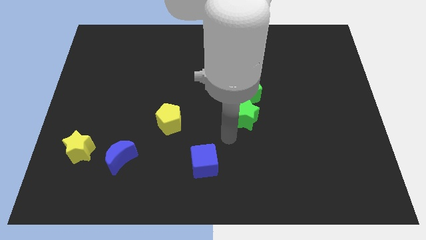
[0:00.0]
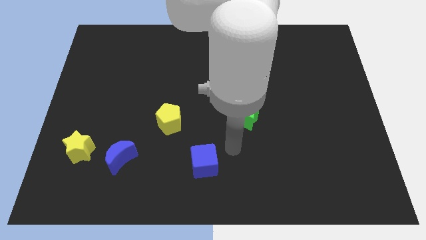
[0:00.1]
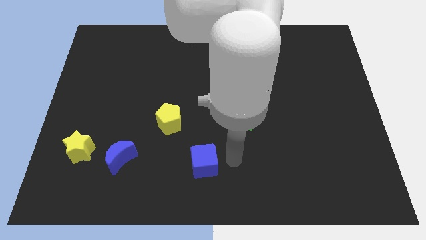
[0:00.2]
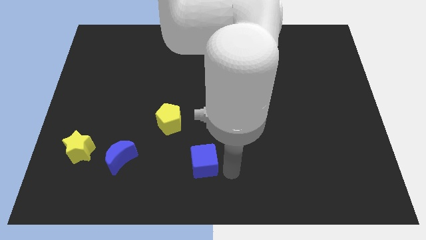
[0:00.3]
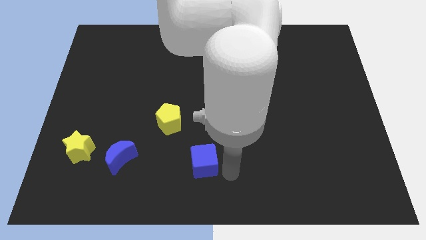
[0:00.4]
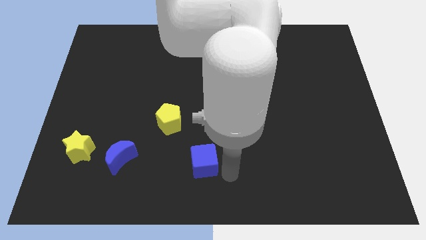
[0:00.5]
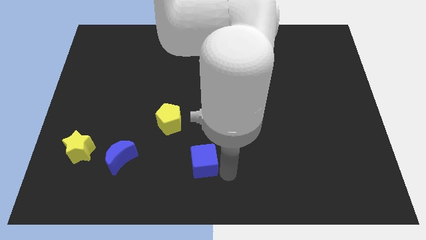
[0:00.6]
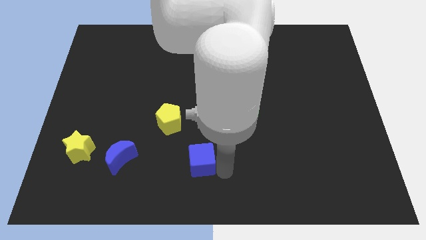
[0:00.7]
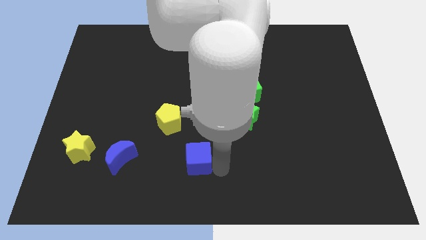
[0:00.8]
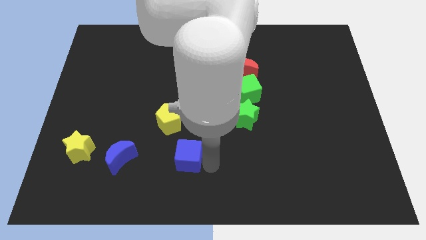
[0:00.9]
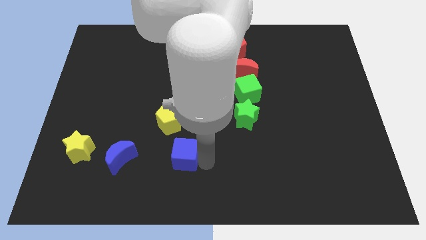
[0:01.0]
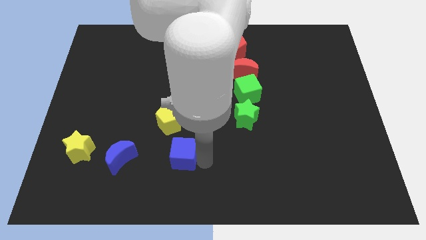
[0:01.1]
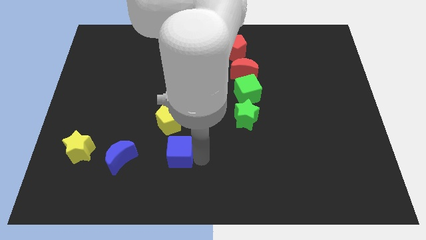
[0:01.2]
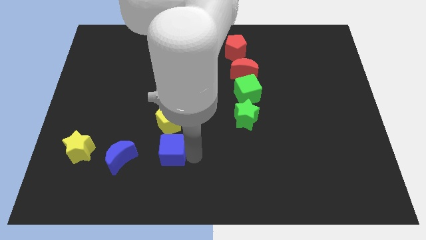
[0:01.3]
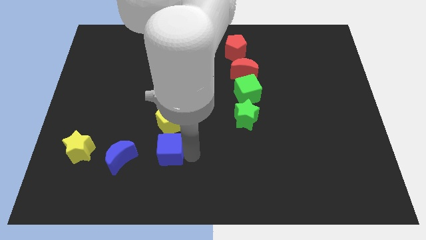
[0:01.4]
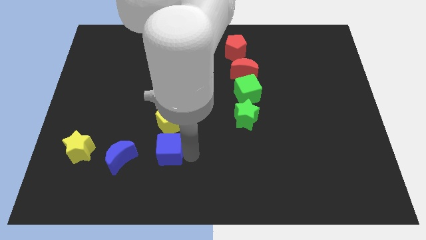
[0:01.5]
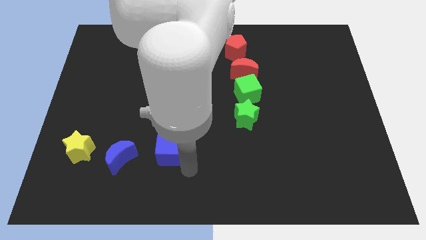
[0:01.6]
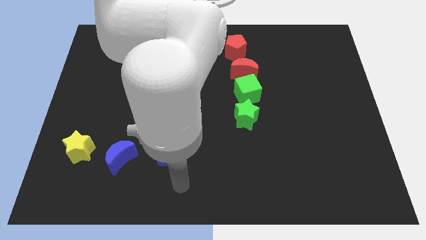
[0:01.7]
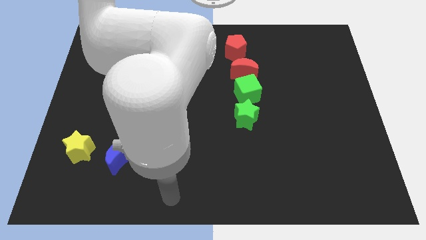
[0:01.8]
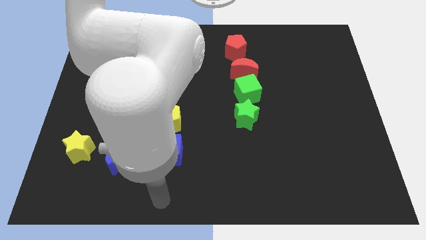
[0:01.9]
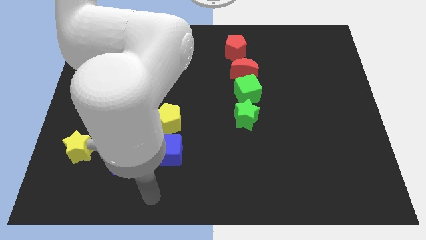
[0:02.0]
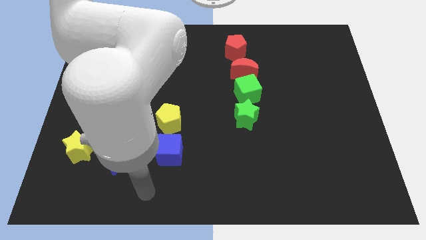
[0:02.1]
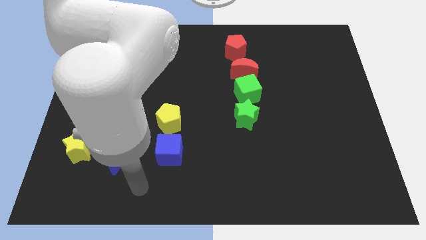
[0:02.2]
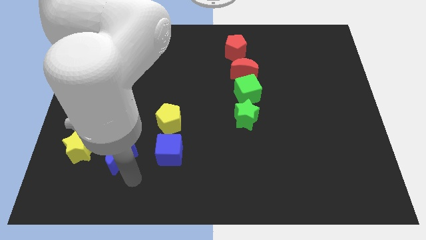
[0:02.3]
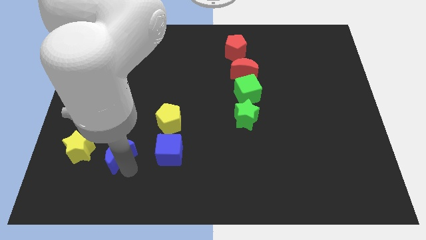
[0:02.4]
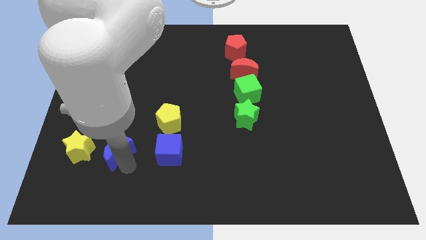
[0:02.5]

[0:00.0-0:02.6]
put the blue cube below the yellow pentagon

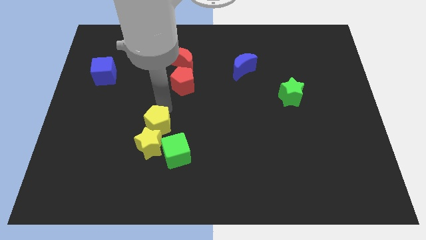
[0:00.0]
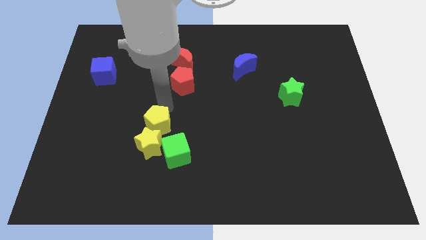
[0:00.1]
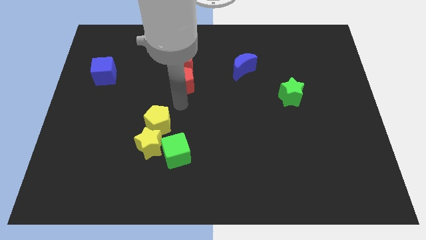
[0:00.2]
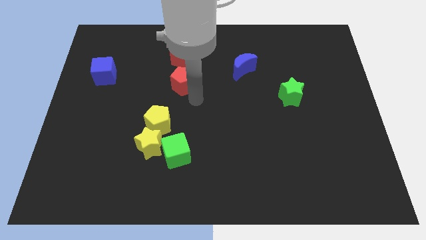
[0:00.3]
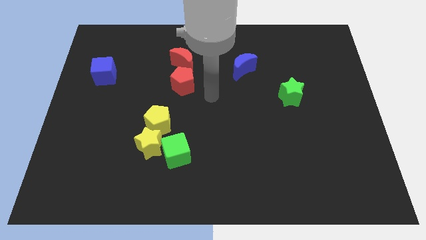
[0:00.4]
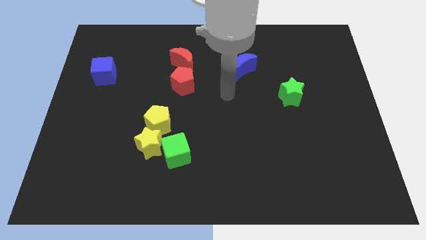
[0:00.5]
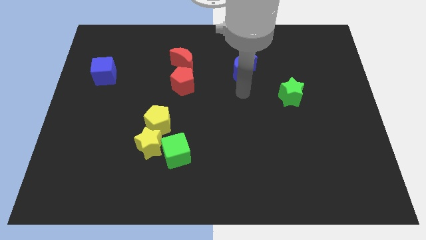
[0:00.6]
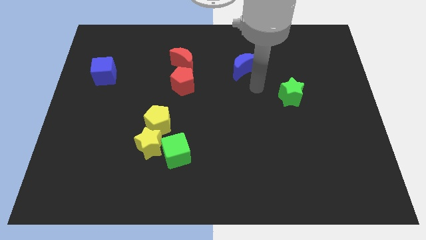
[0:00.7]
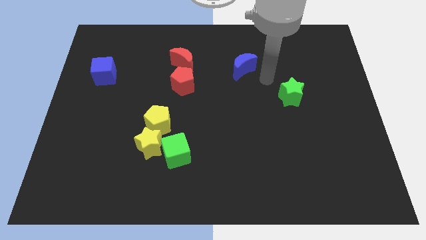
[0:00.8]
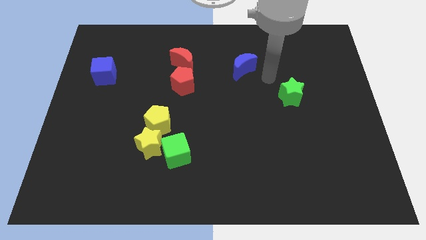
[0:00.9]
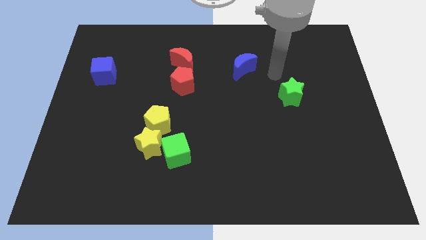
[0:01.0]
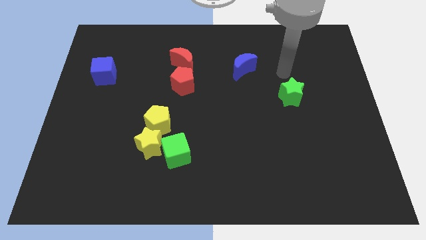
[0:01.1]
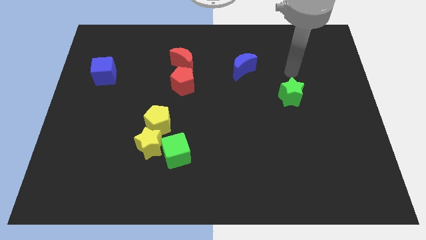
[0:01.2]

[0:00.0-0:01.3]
go and point your hand at the top of the green star

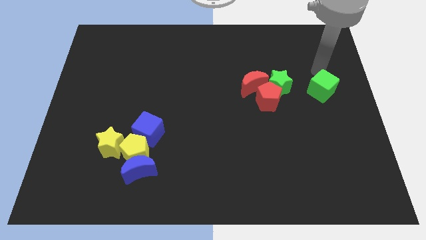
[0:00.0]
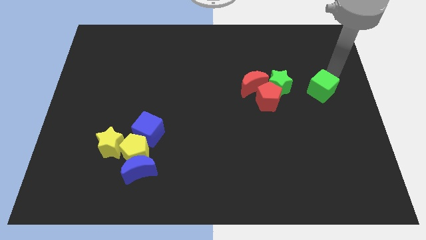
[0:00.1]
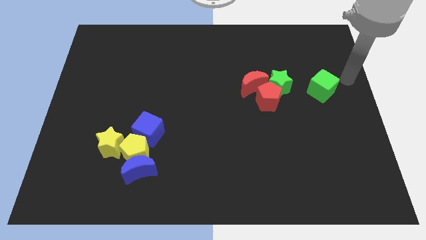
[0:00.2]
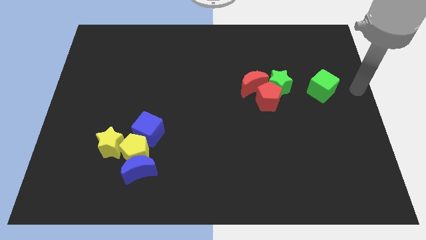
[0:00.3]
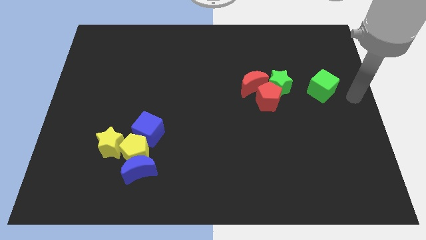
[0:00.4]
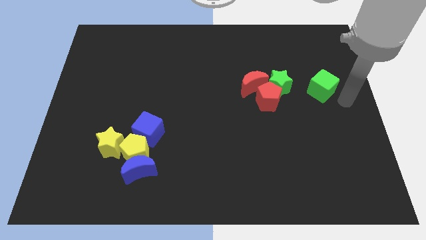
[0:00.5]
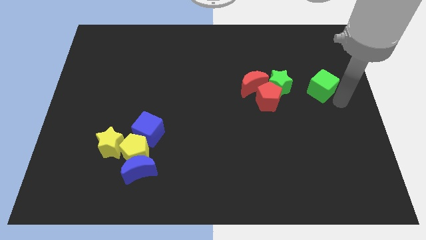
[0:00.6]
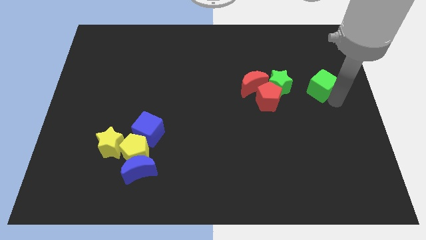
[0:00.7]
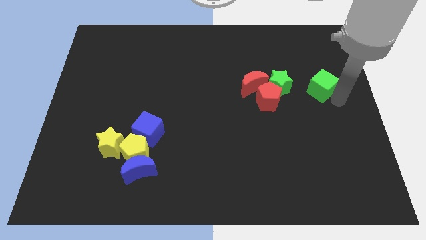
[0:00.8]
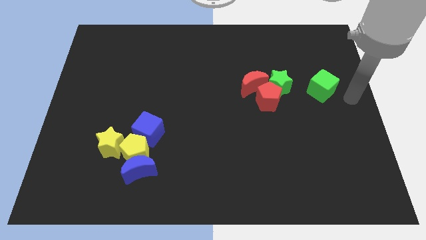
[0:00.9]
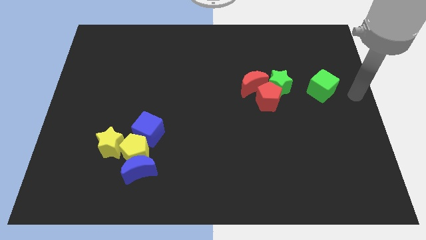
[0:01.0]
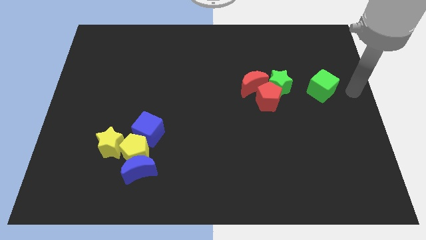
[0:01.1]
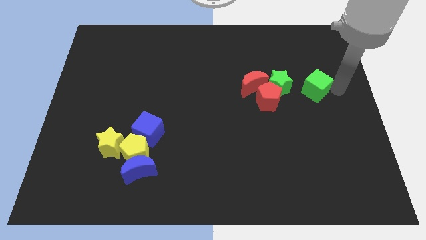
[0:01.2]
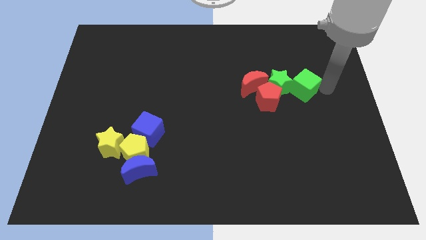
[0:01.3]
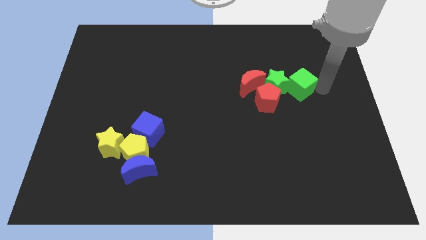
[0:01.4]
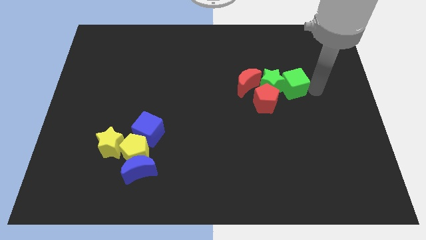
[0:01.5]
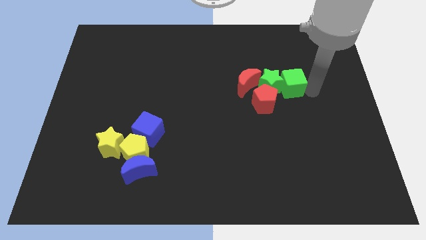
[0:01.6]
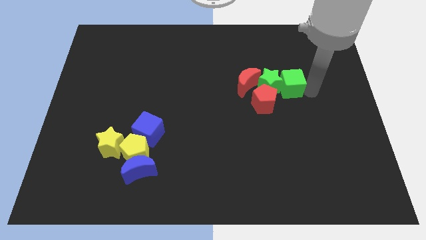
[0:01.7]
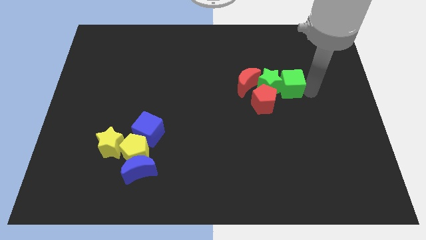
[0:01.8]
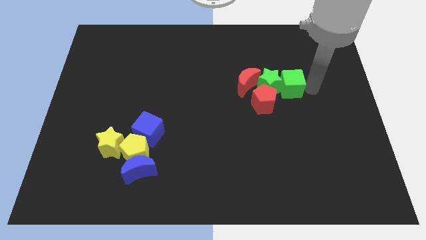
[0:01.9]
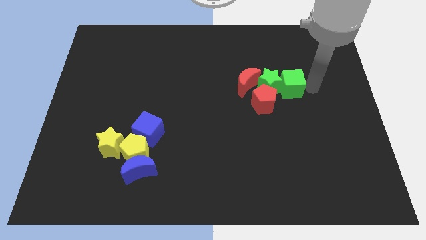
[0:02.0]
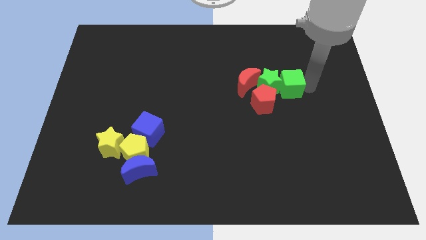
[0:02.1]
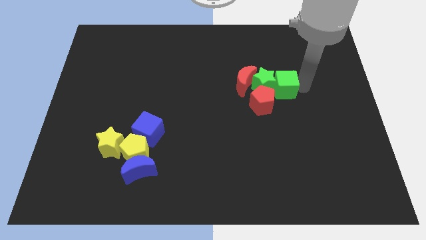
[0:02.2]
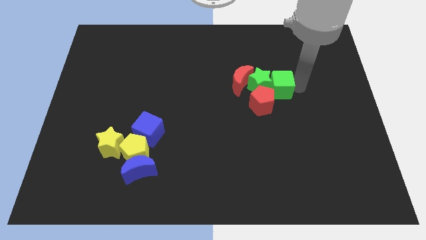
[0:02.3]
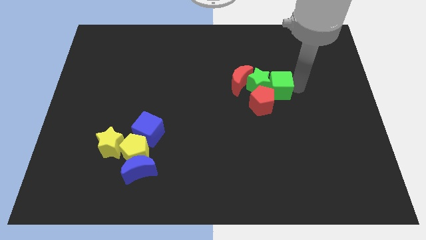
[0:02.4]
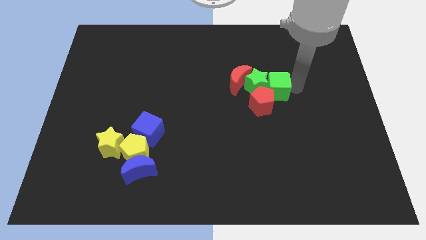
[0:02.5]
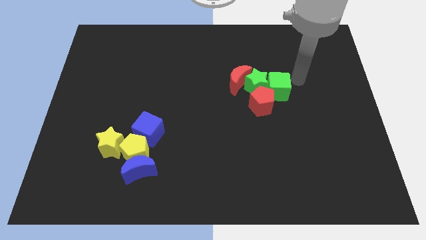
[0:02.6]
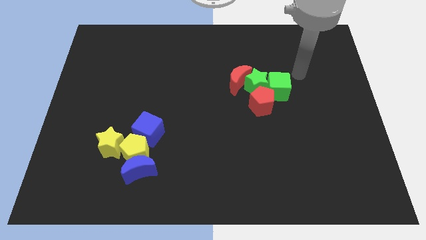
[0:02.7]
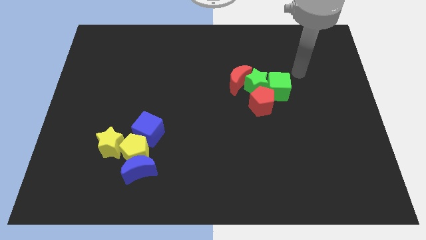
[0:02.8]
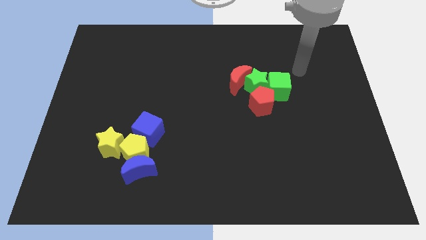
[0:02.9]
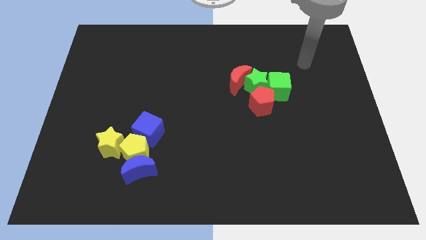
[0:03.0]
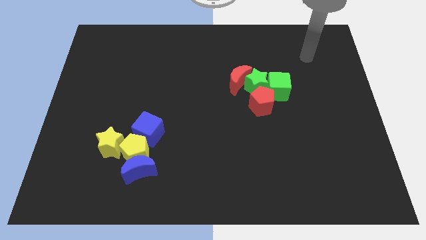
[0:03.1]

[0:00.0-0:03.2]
slide the green cube into the green star

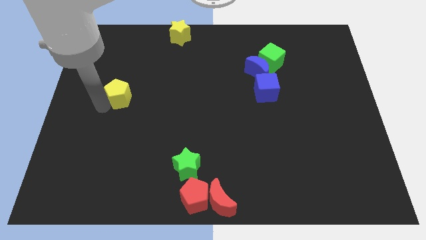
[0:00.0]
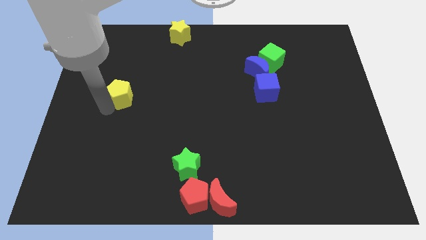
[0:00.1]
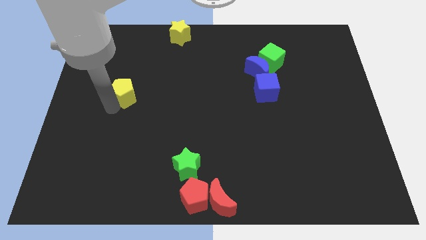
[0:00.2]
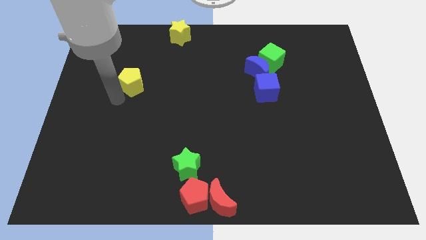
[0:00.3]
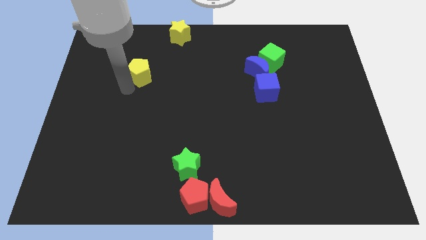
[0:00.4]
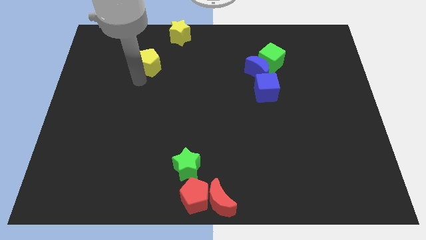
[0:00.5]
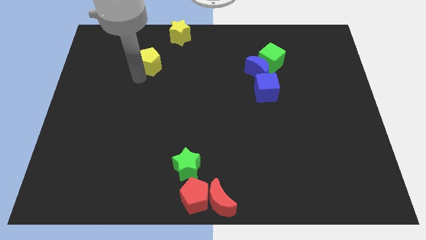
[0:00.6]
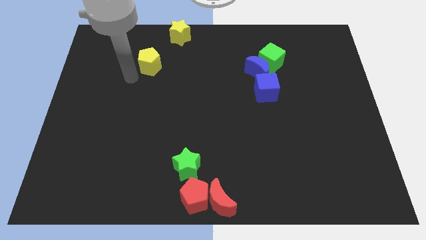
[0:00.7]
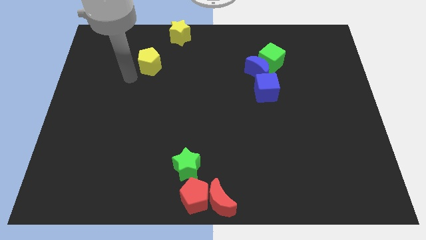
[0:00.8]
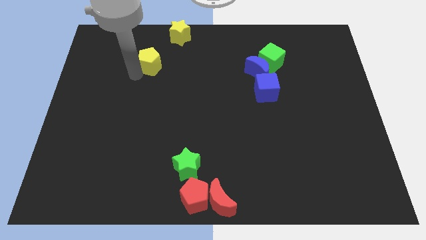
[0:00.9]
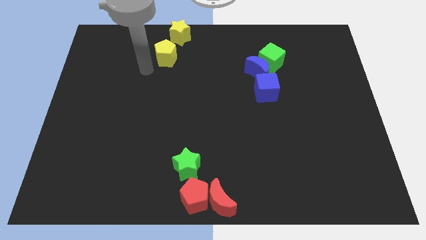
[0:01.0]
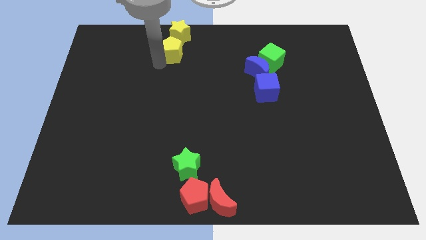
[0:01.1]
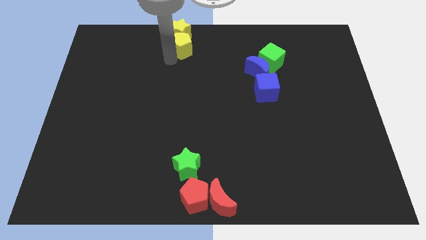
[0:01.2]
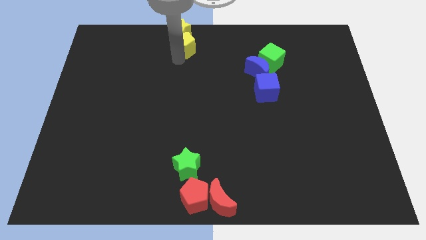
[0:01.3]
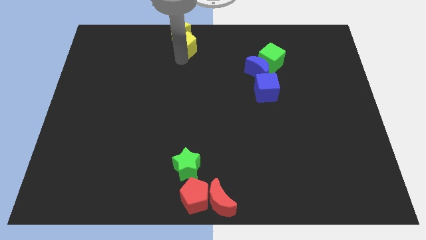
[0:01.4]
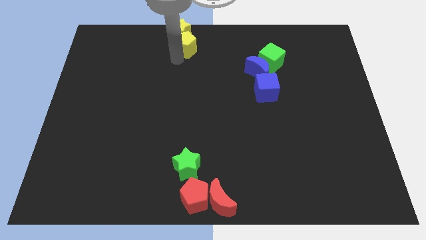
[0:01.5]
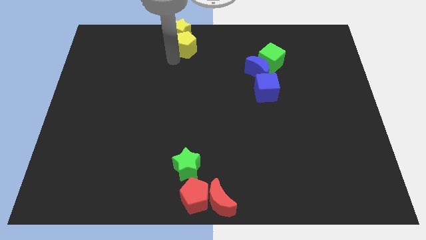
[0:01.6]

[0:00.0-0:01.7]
push the yellow pentagon into the yellow star

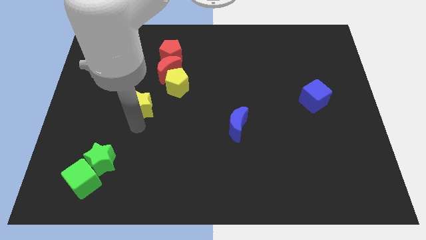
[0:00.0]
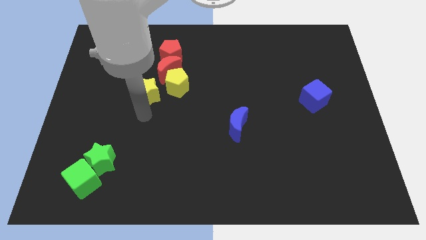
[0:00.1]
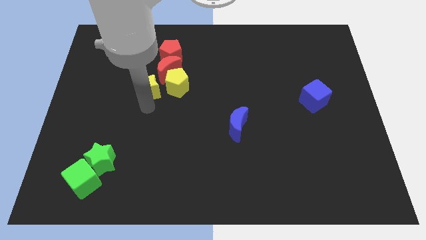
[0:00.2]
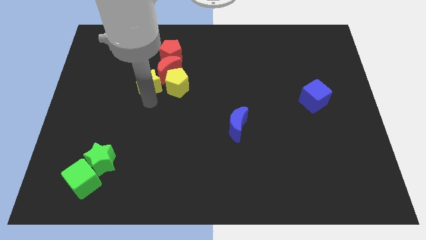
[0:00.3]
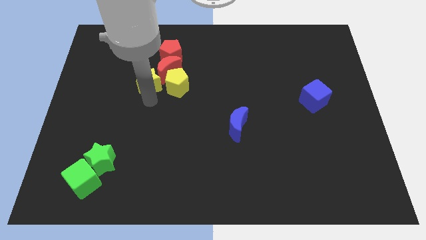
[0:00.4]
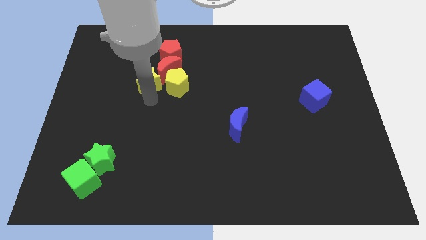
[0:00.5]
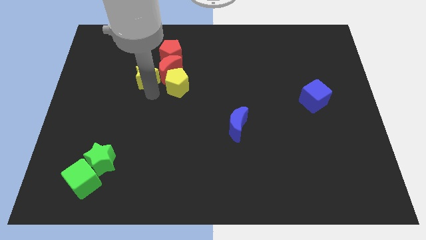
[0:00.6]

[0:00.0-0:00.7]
place yellow pentagon below the red crescent
